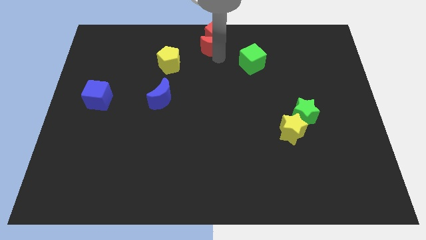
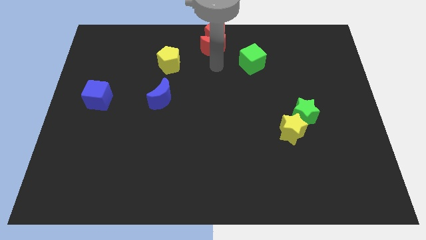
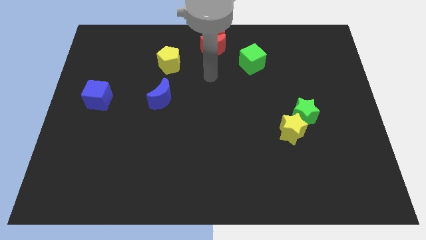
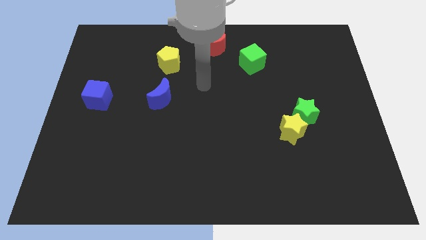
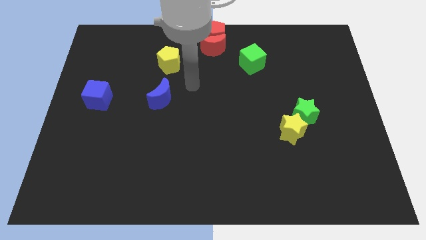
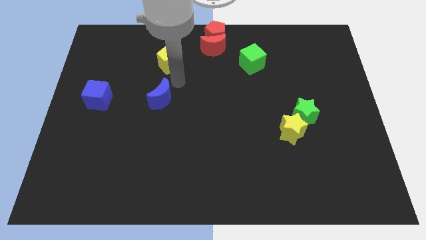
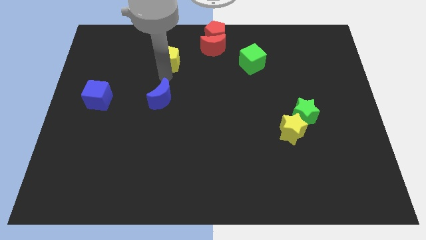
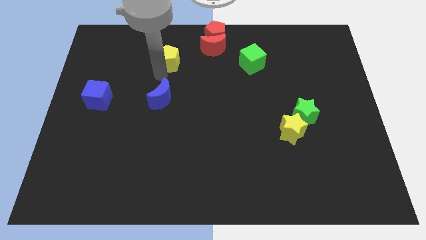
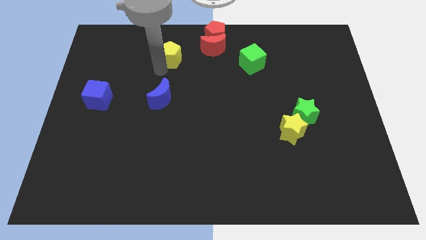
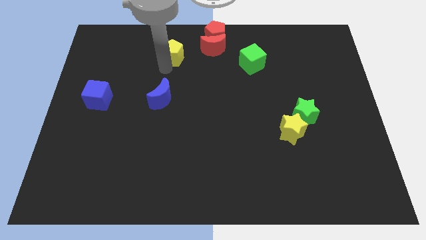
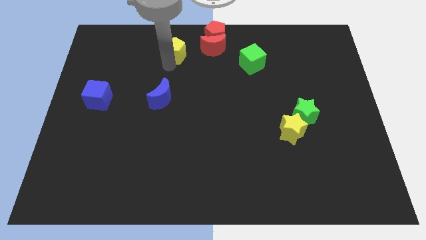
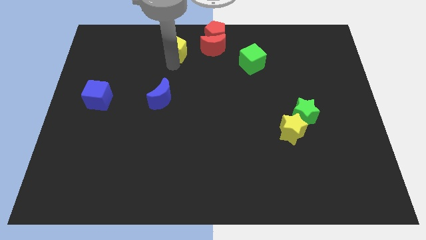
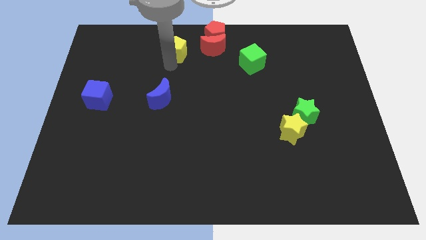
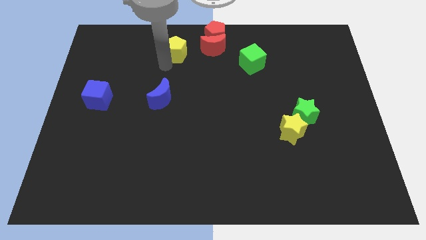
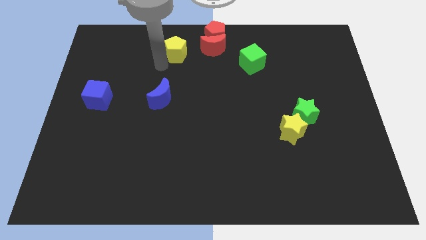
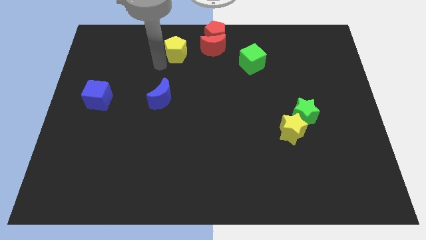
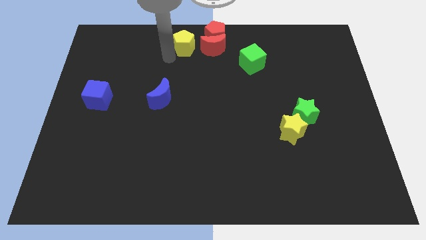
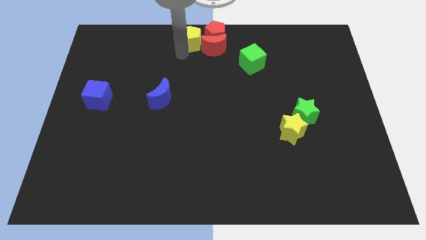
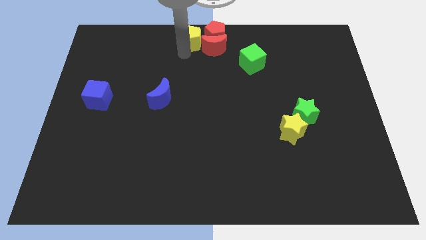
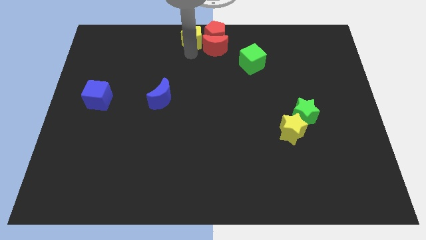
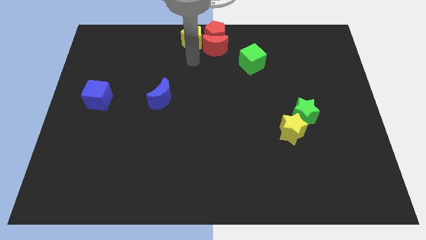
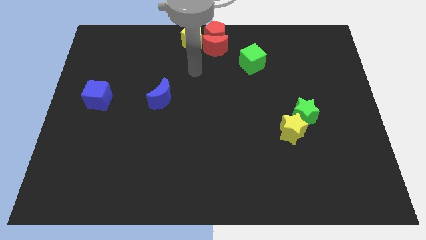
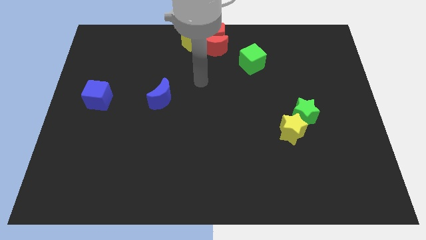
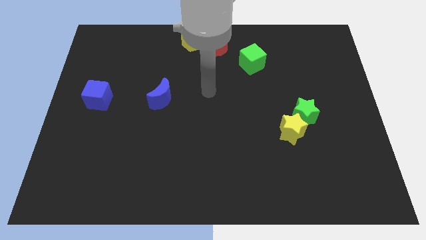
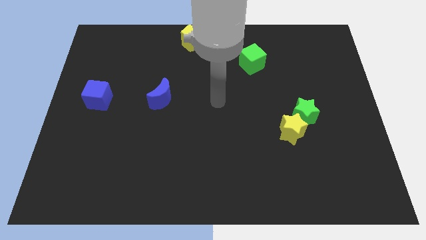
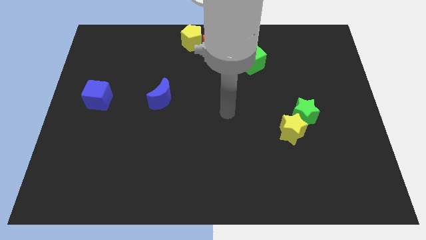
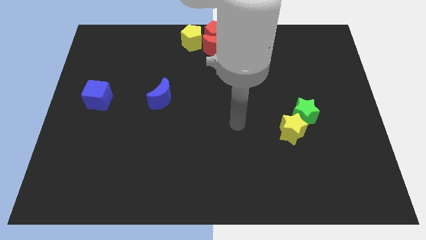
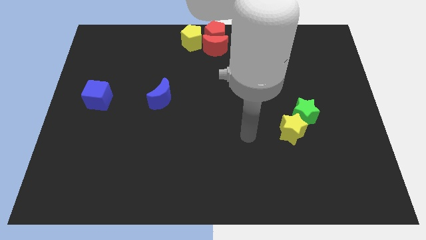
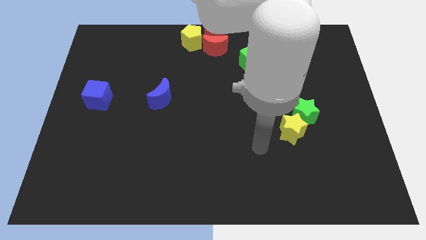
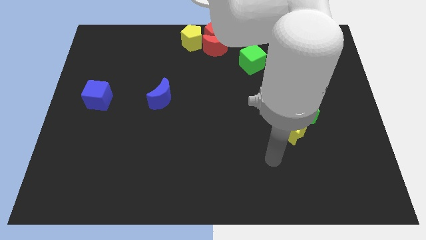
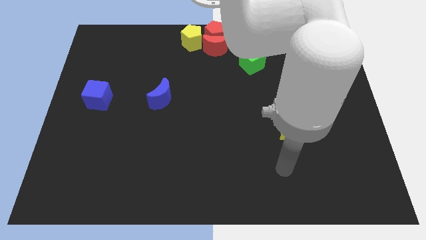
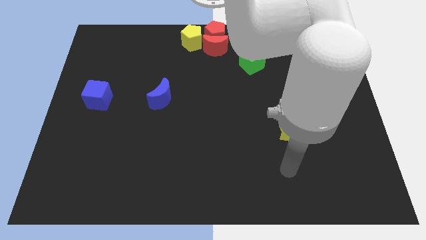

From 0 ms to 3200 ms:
move the yellow pentagon to the left of the red crescent

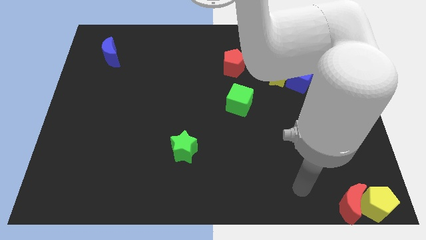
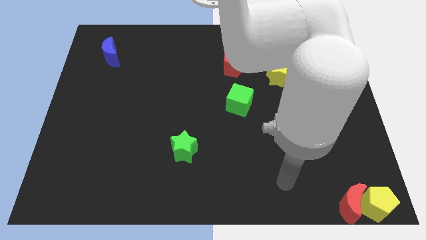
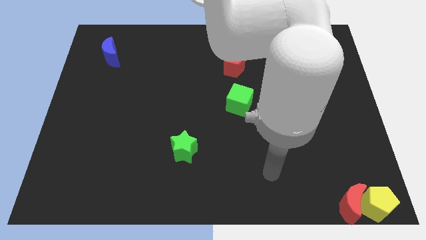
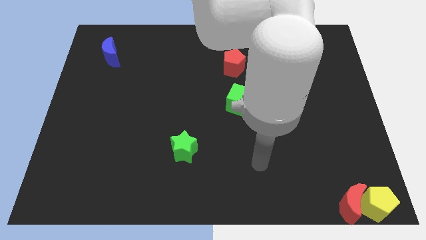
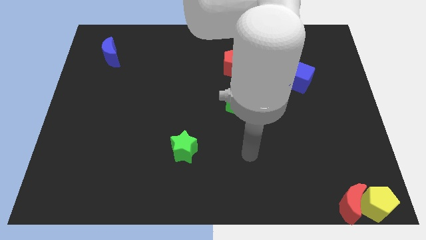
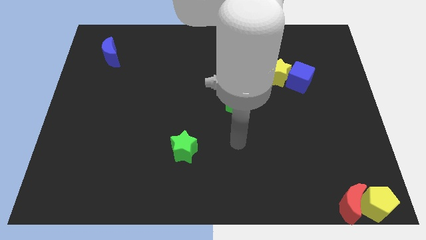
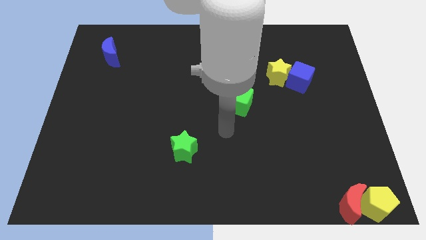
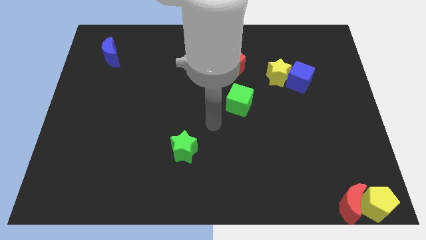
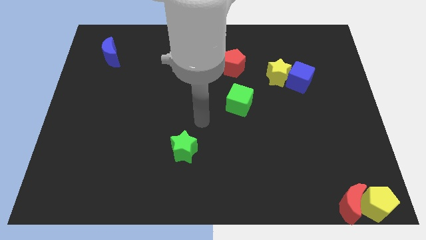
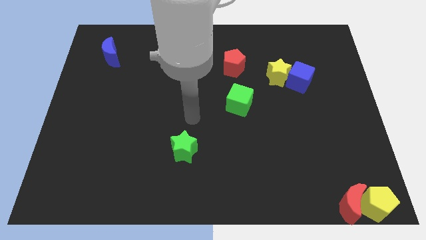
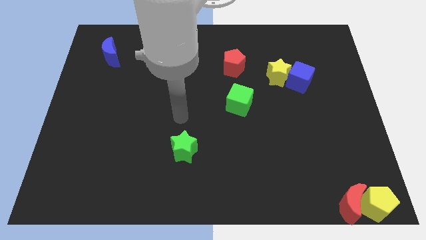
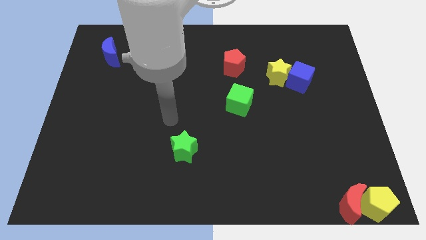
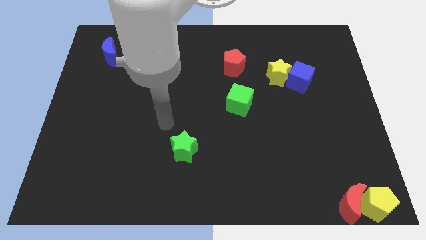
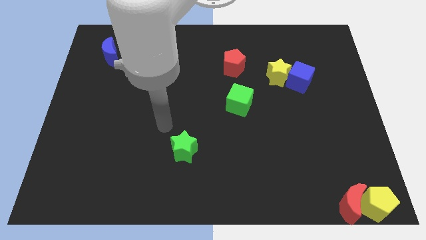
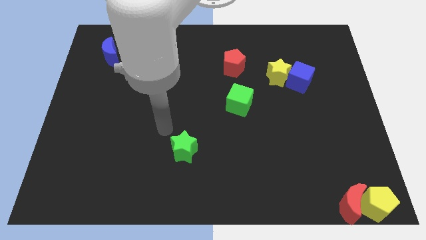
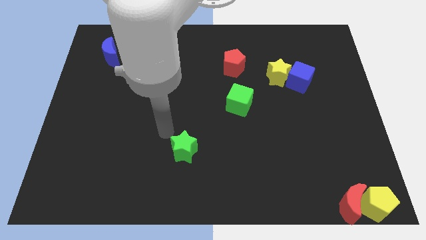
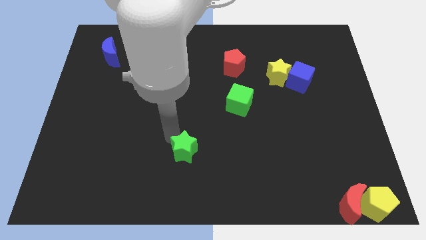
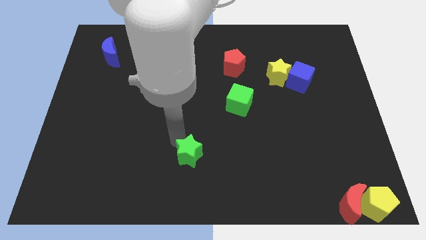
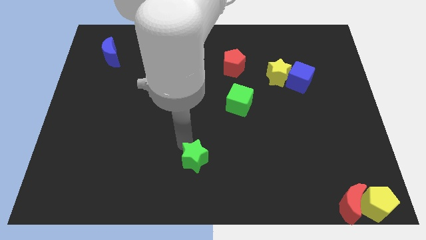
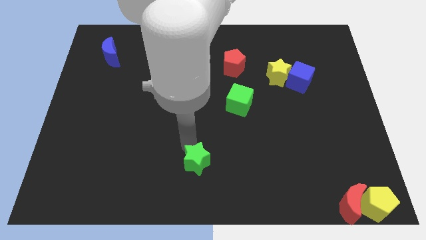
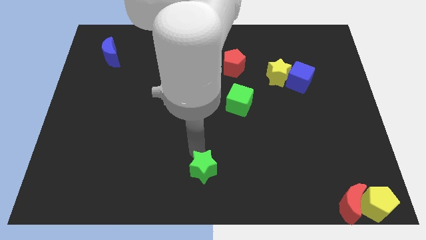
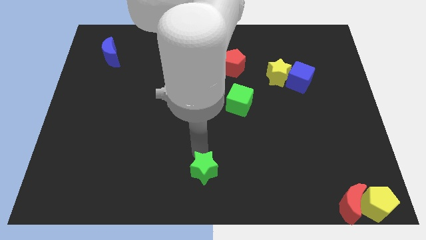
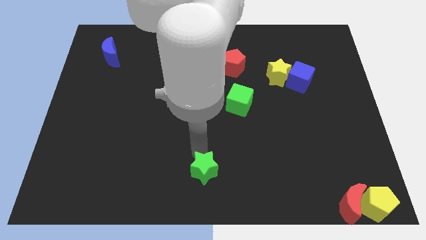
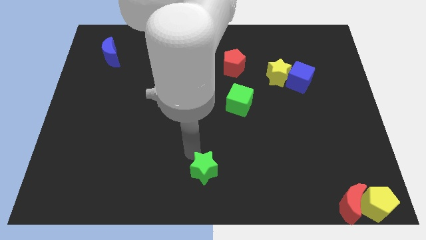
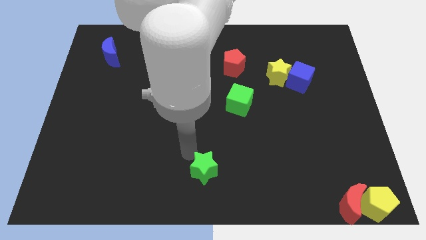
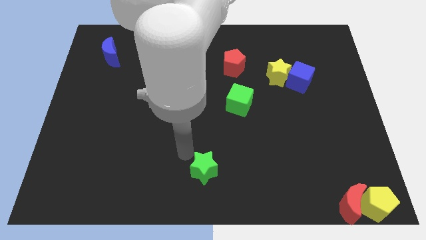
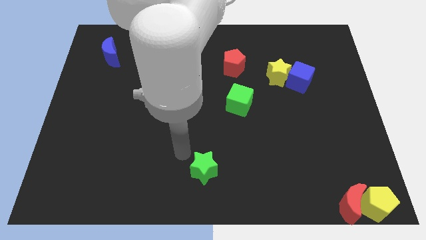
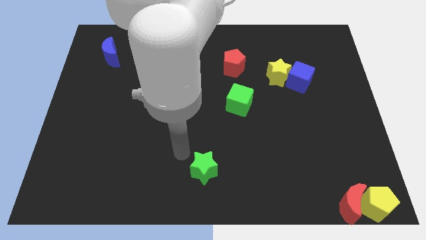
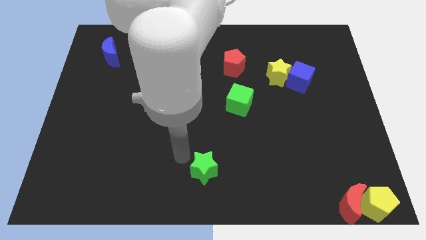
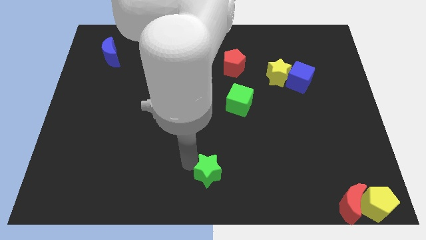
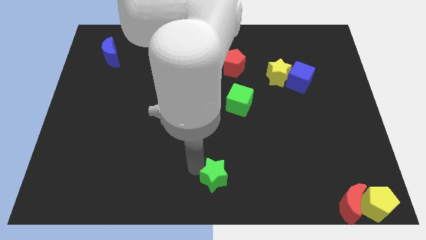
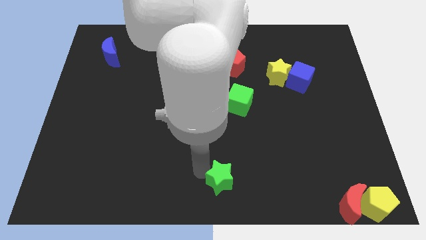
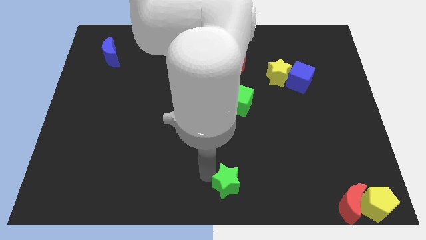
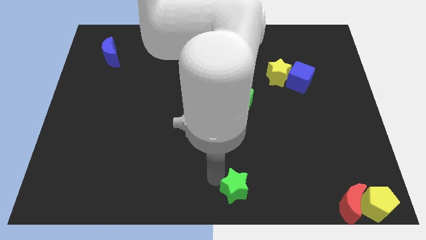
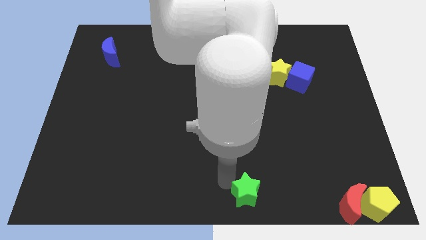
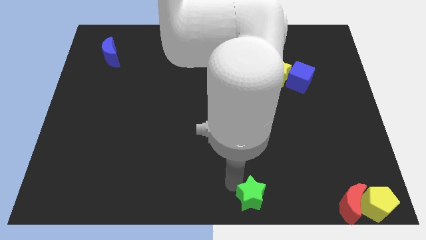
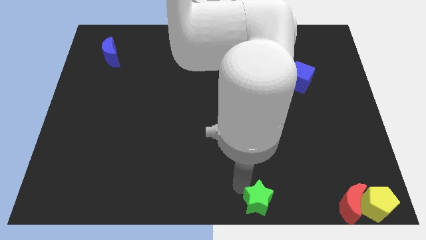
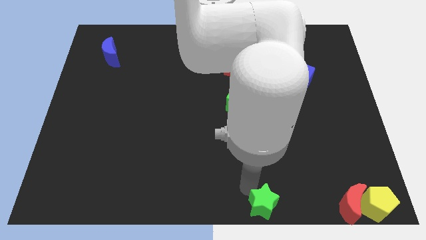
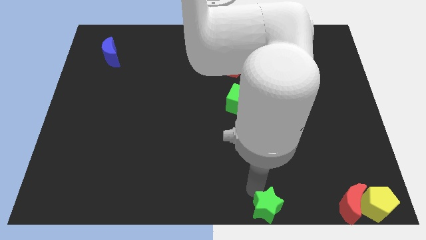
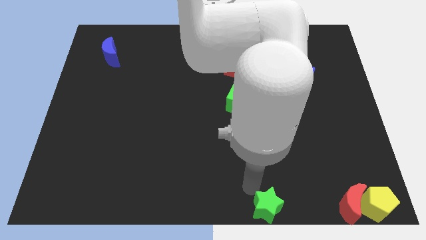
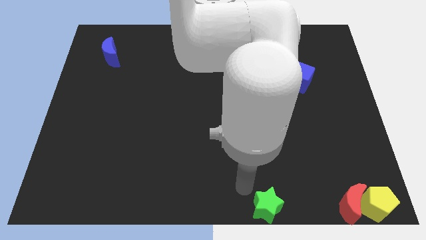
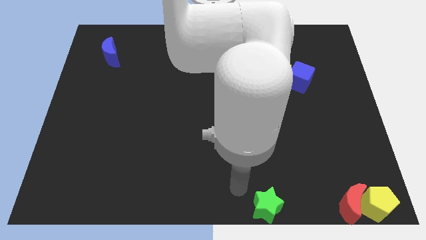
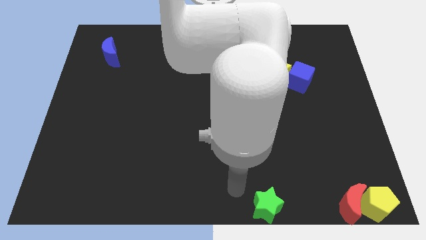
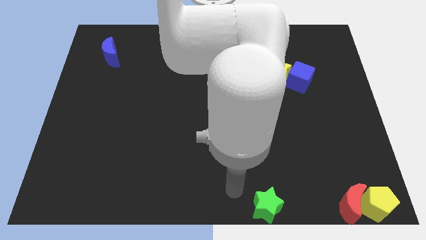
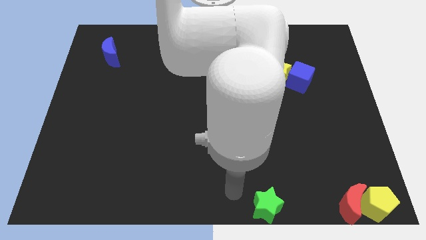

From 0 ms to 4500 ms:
put the green star to the left of the red crescent

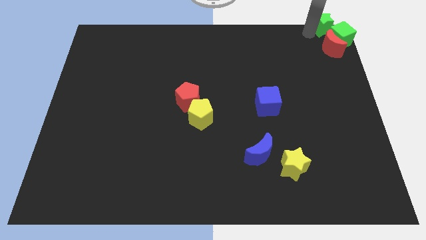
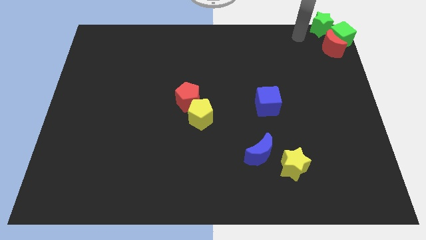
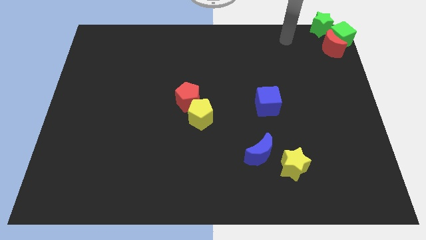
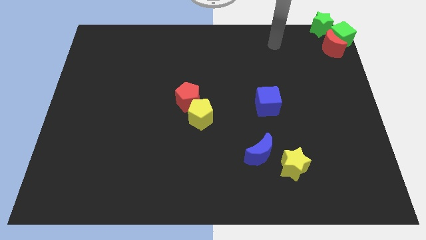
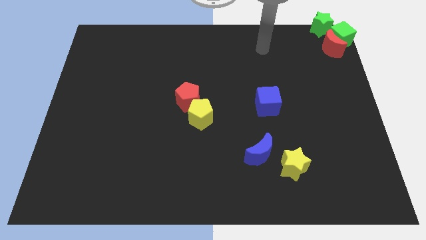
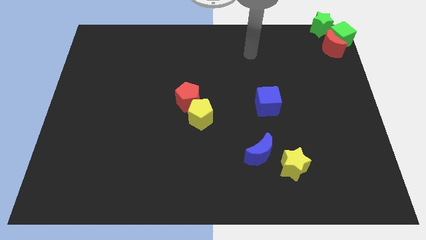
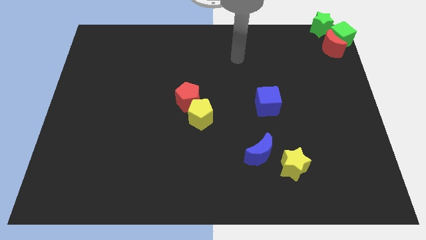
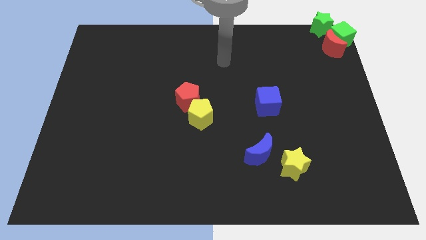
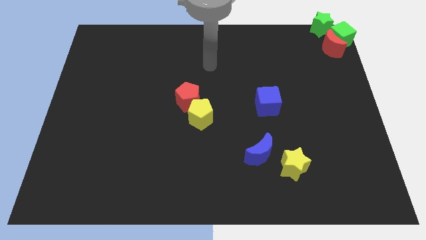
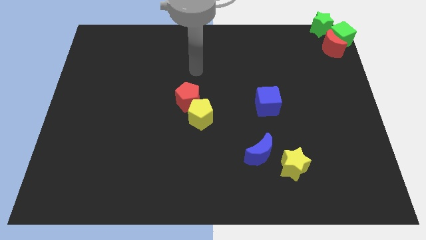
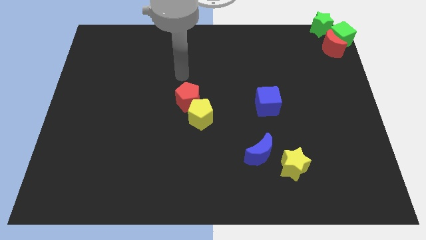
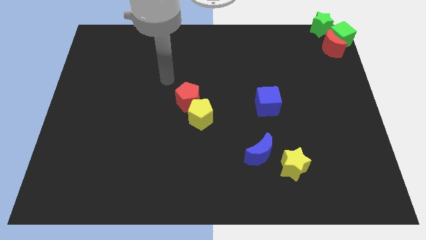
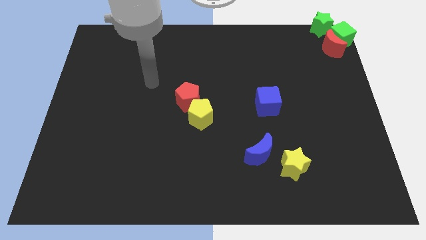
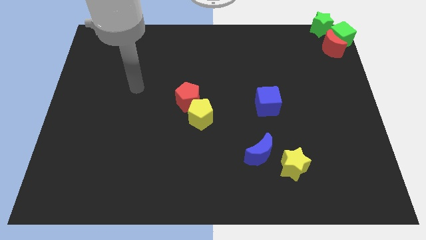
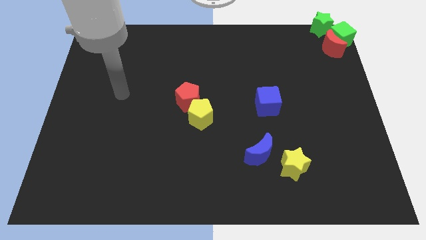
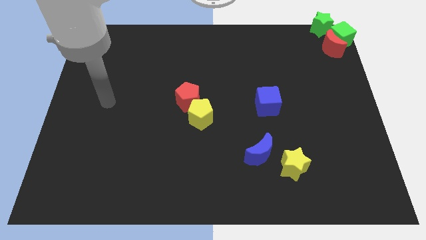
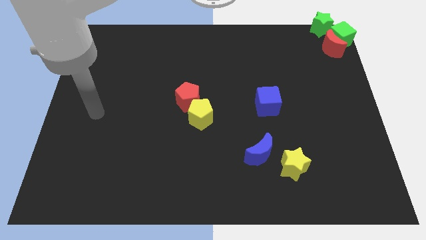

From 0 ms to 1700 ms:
move away from the green star
